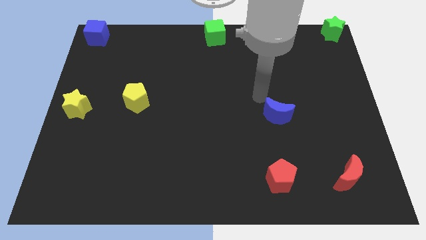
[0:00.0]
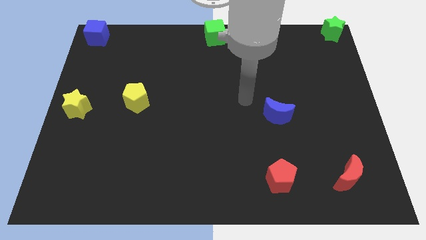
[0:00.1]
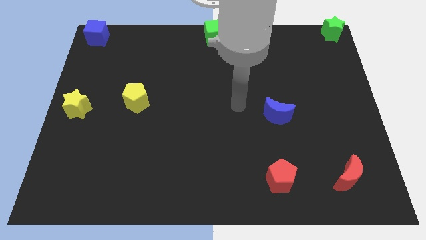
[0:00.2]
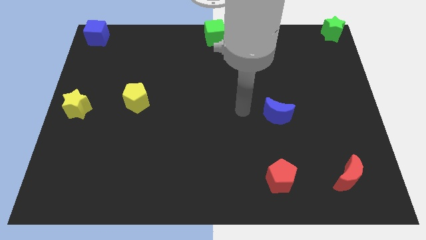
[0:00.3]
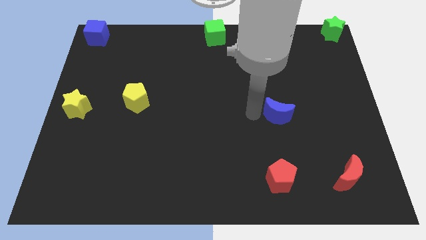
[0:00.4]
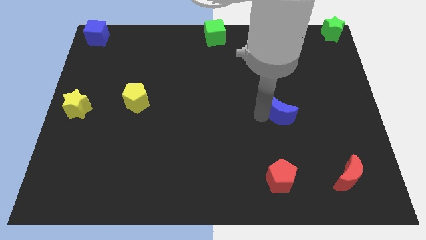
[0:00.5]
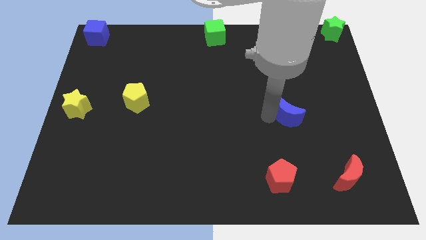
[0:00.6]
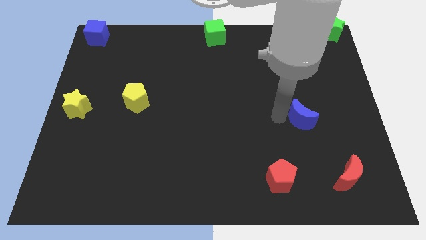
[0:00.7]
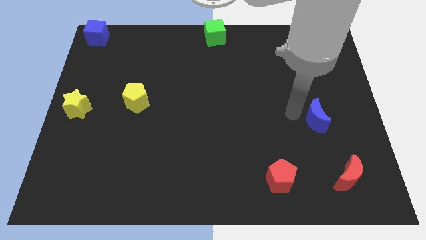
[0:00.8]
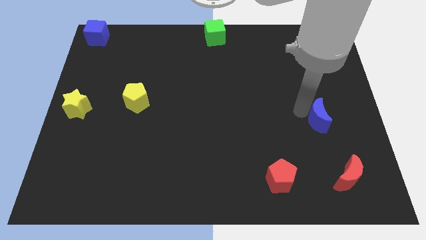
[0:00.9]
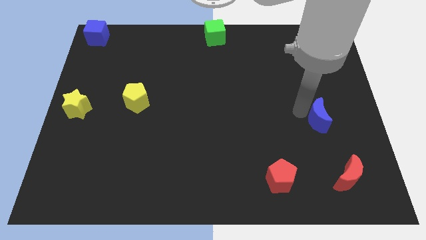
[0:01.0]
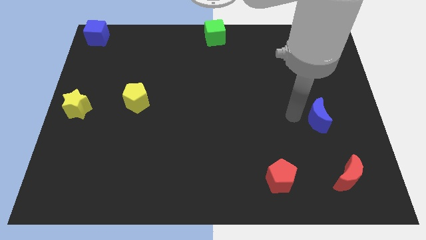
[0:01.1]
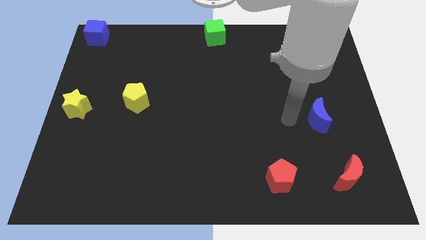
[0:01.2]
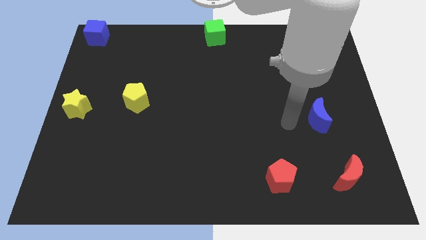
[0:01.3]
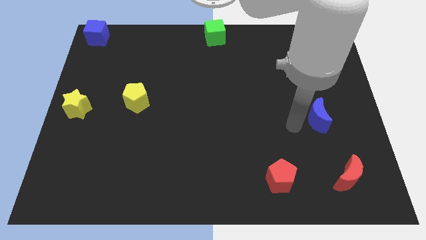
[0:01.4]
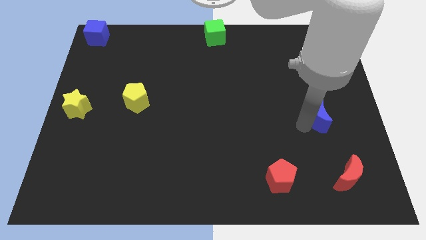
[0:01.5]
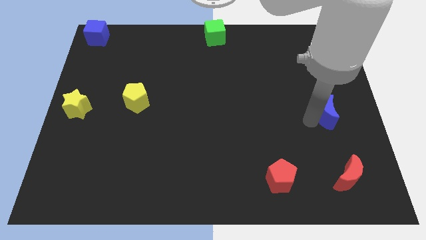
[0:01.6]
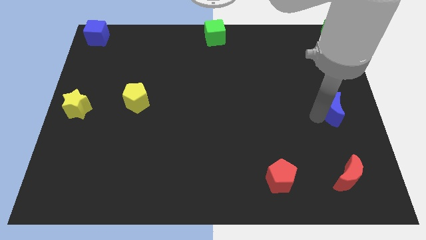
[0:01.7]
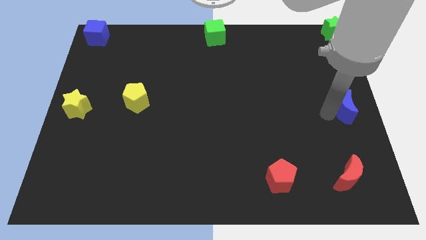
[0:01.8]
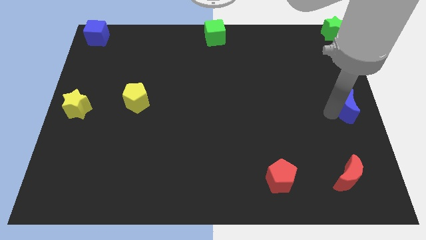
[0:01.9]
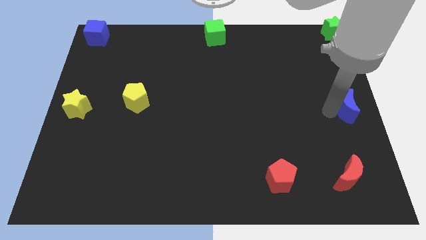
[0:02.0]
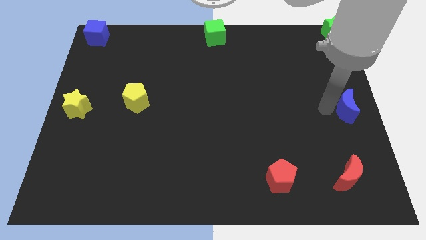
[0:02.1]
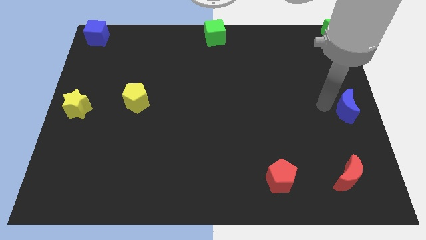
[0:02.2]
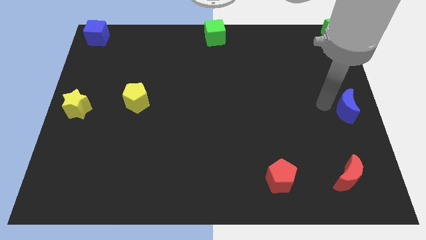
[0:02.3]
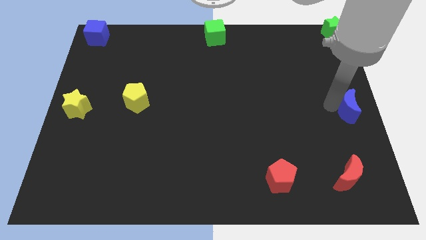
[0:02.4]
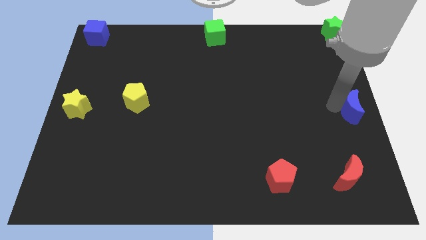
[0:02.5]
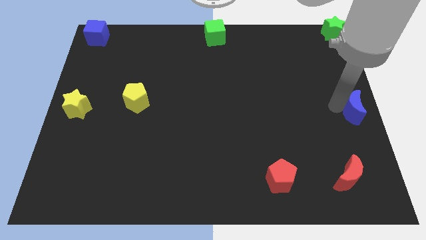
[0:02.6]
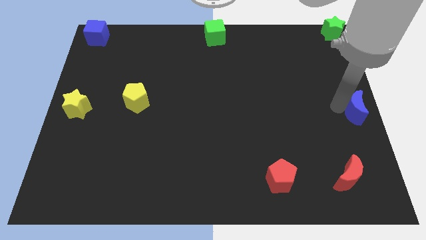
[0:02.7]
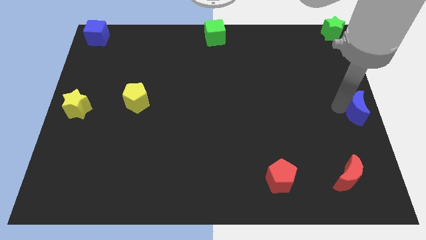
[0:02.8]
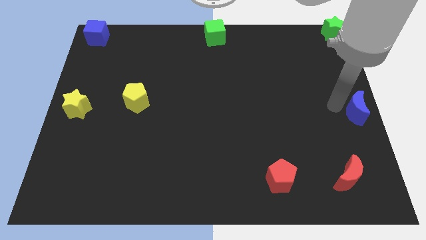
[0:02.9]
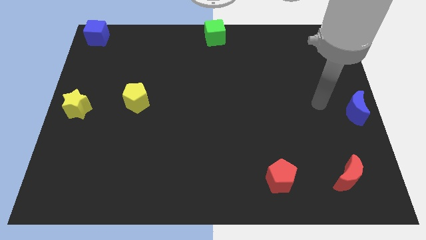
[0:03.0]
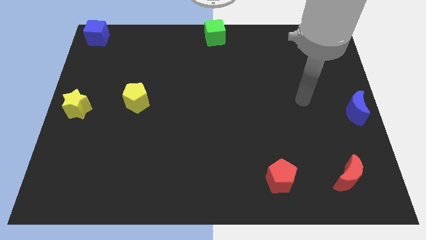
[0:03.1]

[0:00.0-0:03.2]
push the blue crescent to the center right corner of the board

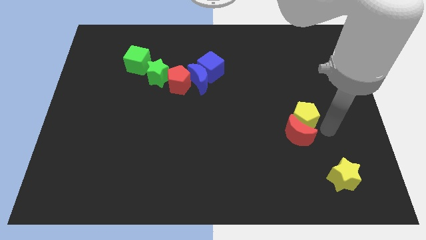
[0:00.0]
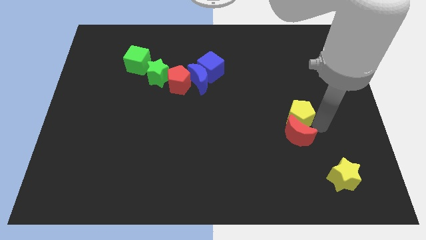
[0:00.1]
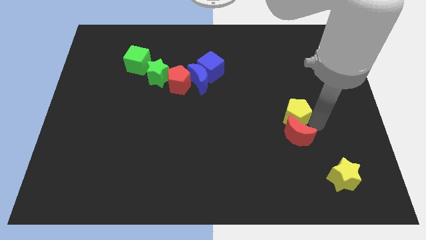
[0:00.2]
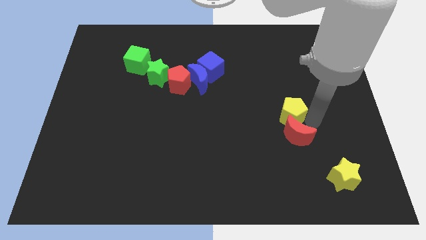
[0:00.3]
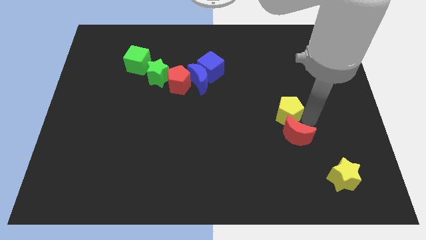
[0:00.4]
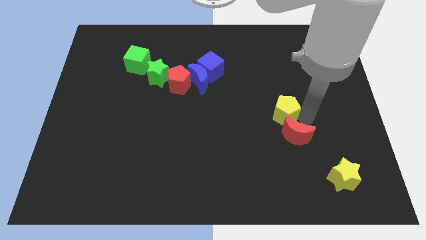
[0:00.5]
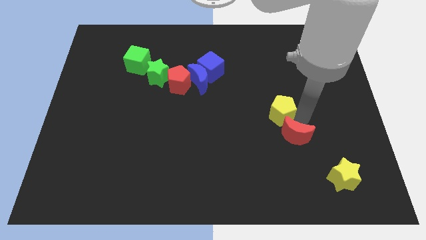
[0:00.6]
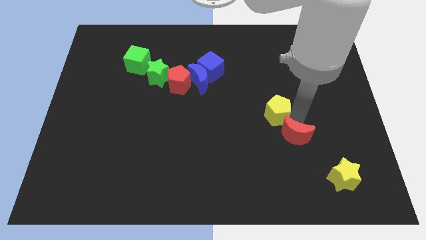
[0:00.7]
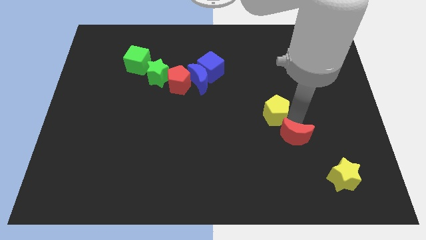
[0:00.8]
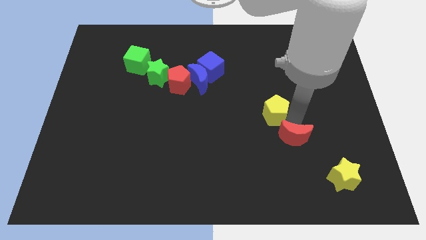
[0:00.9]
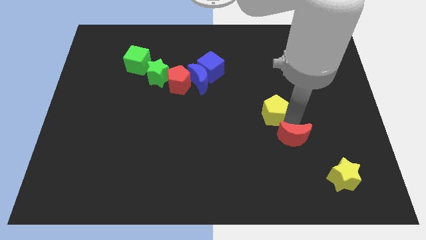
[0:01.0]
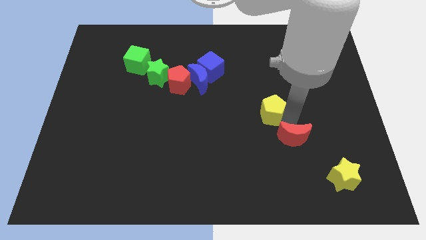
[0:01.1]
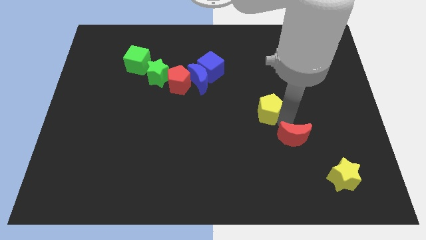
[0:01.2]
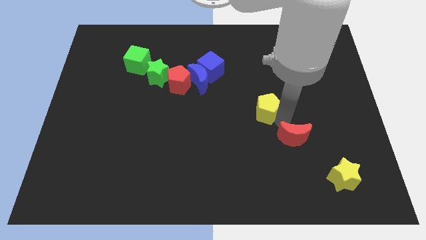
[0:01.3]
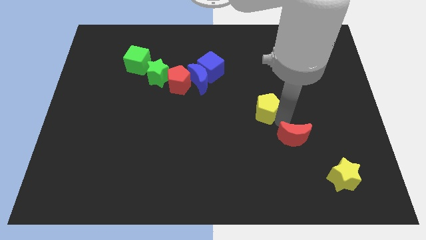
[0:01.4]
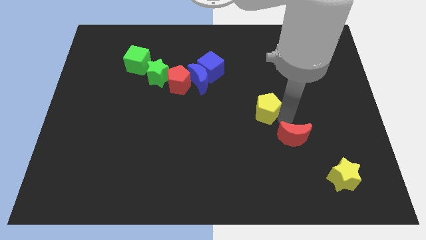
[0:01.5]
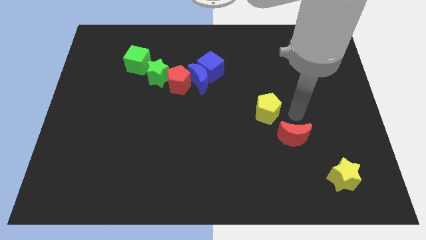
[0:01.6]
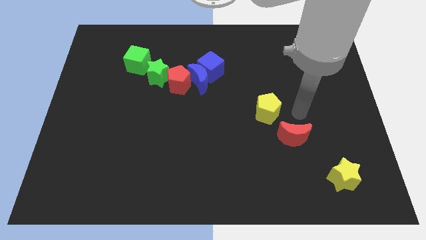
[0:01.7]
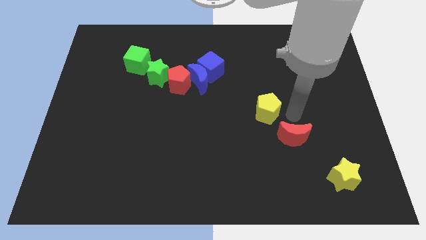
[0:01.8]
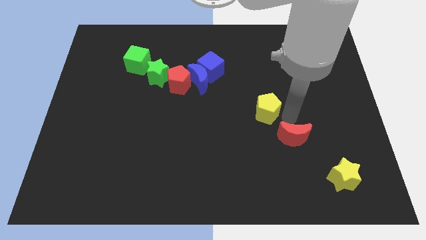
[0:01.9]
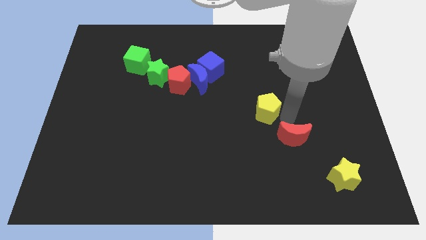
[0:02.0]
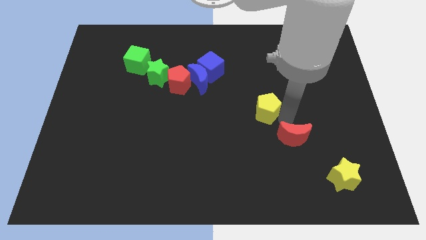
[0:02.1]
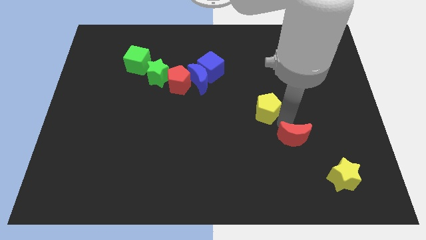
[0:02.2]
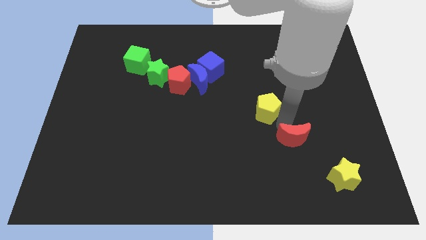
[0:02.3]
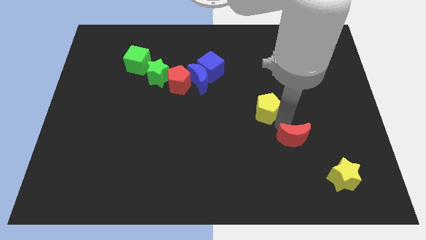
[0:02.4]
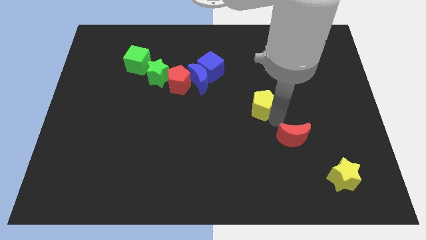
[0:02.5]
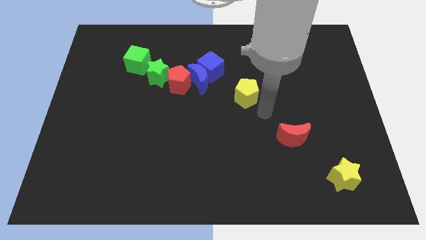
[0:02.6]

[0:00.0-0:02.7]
separate the yellow pentagon from the red moon

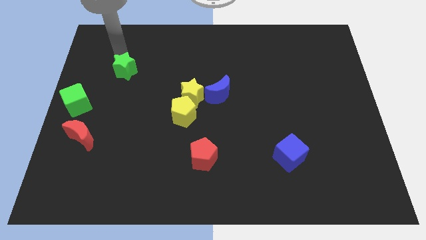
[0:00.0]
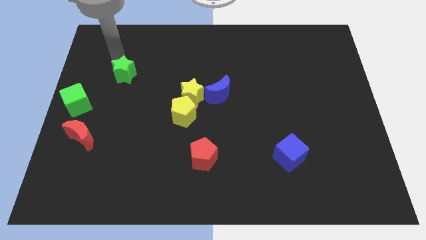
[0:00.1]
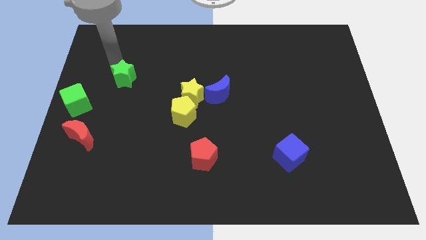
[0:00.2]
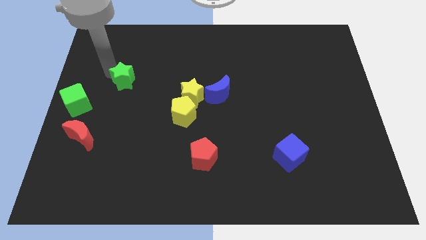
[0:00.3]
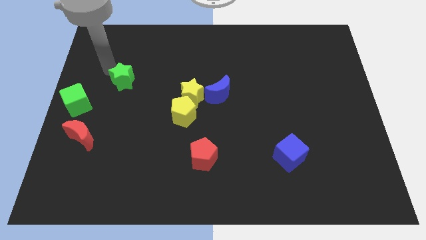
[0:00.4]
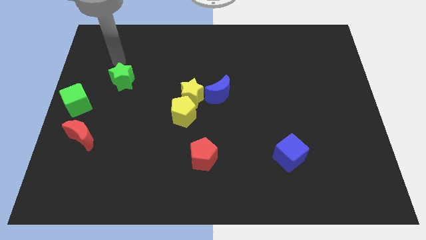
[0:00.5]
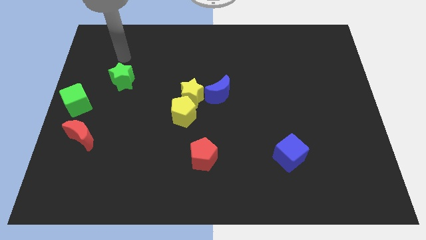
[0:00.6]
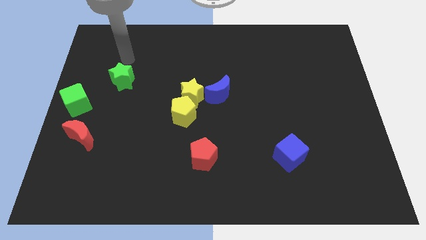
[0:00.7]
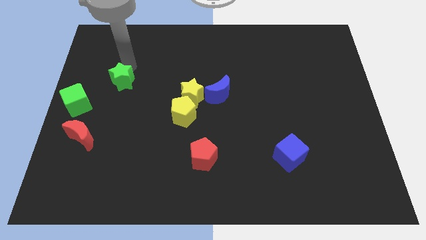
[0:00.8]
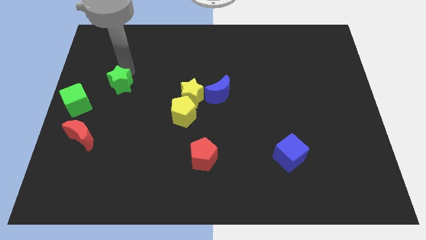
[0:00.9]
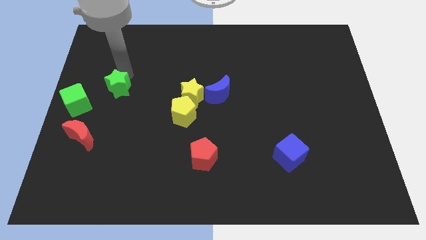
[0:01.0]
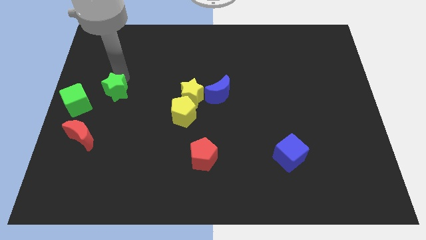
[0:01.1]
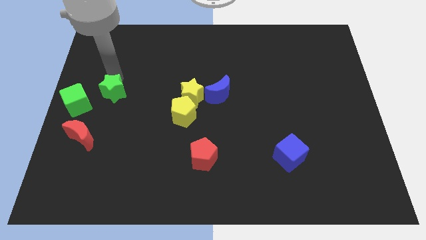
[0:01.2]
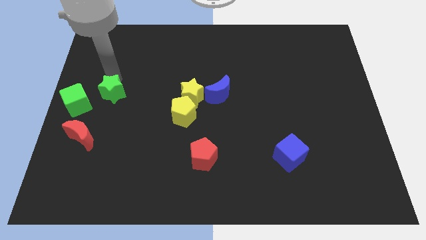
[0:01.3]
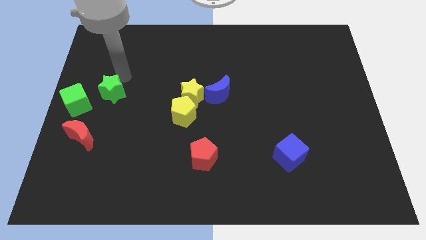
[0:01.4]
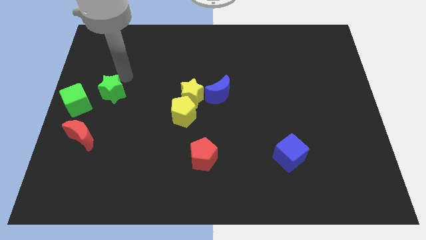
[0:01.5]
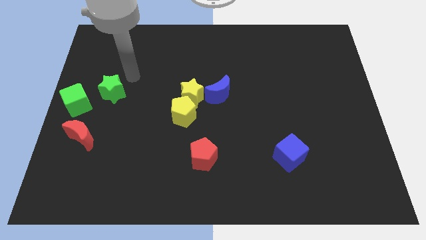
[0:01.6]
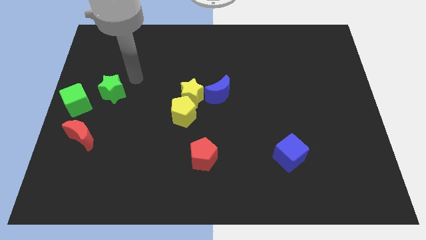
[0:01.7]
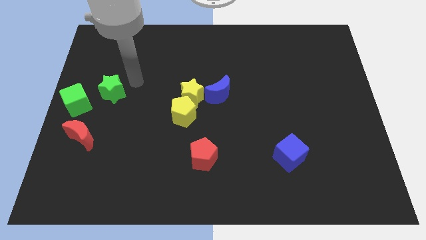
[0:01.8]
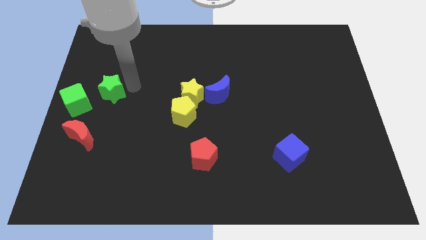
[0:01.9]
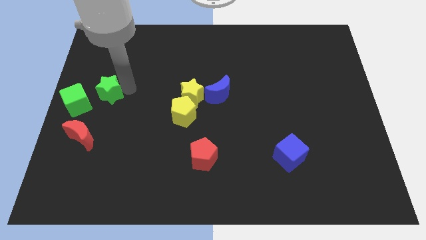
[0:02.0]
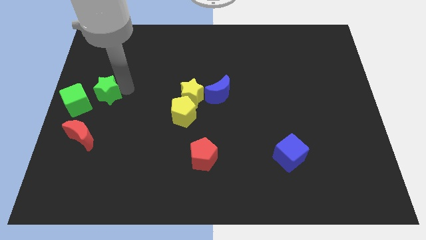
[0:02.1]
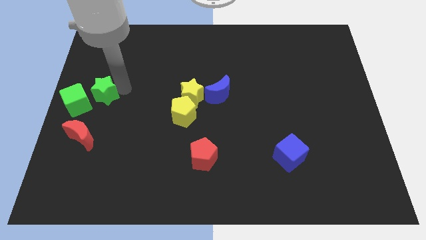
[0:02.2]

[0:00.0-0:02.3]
push the green star to the right of the green cube

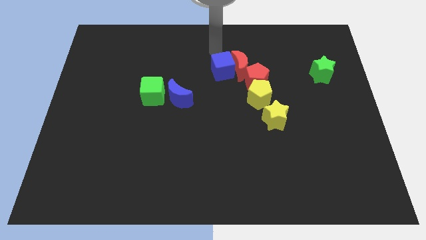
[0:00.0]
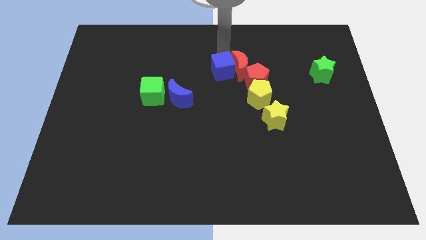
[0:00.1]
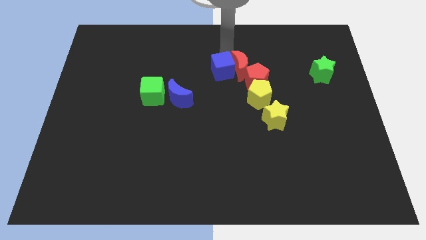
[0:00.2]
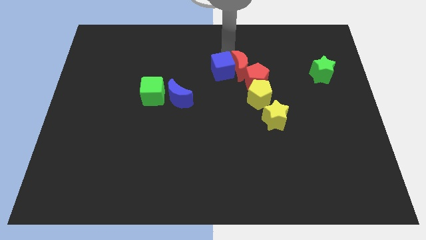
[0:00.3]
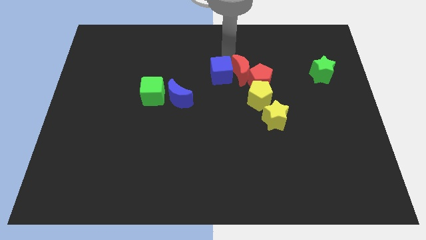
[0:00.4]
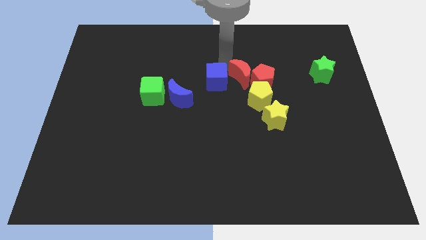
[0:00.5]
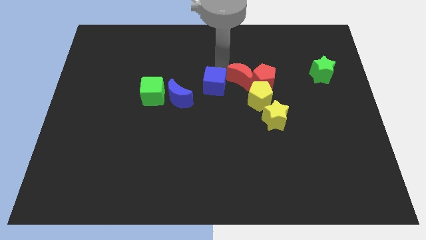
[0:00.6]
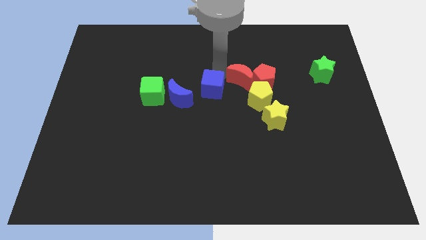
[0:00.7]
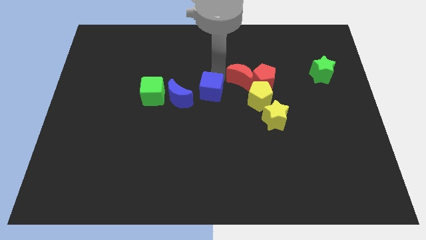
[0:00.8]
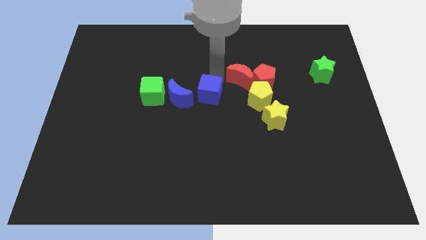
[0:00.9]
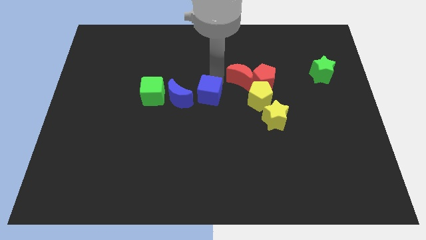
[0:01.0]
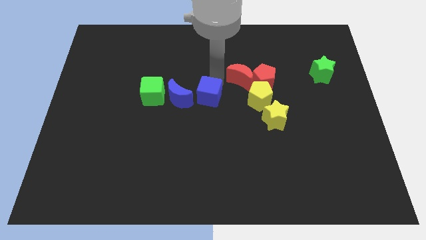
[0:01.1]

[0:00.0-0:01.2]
push the blue cube downwards
